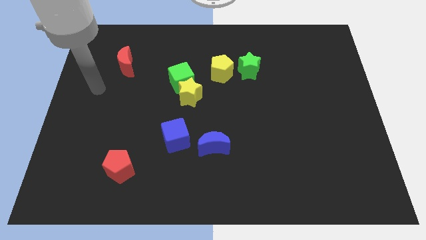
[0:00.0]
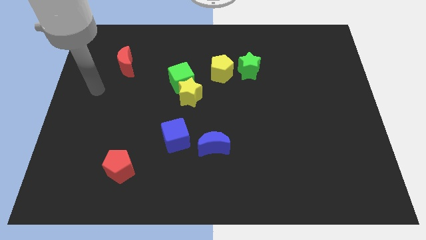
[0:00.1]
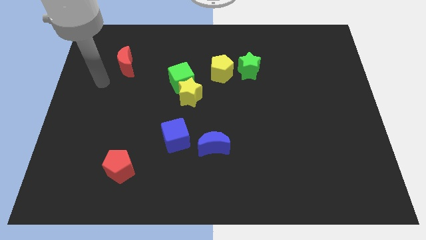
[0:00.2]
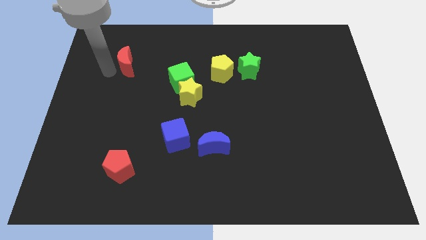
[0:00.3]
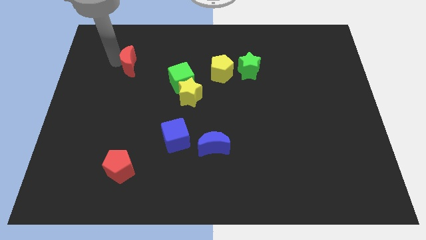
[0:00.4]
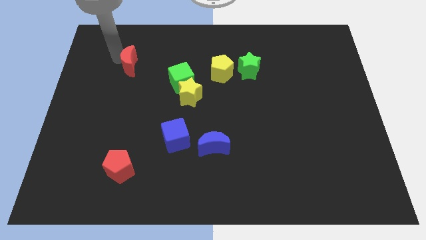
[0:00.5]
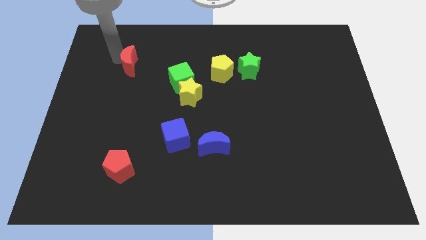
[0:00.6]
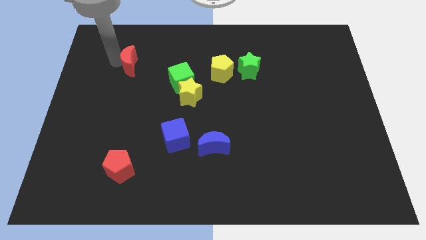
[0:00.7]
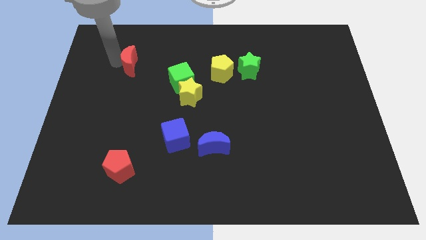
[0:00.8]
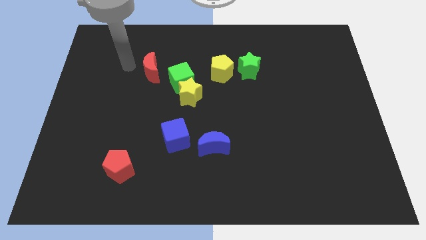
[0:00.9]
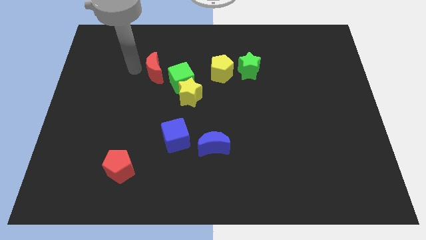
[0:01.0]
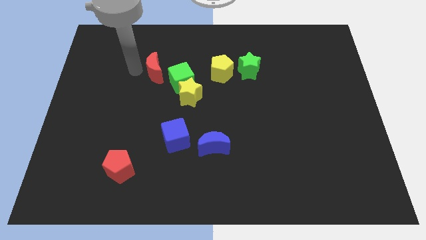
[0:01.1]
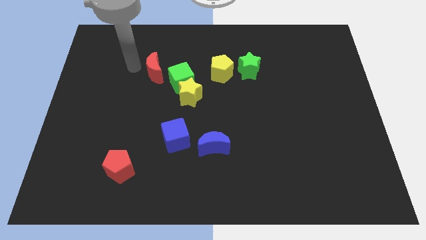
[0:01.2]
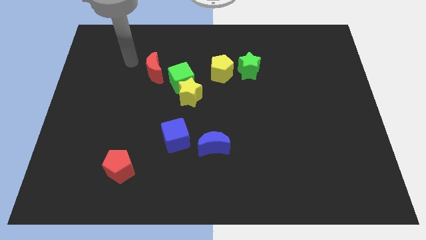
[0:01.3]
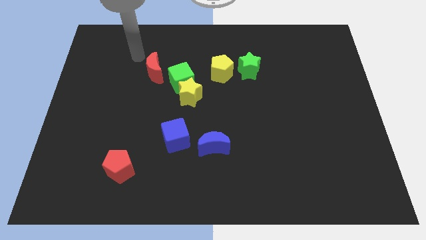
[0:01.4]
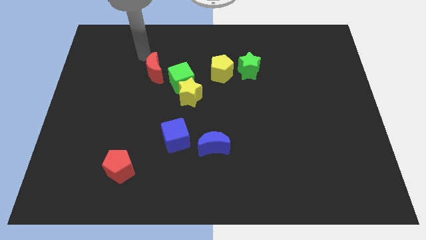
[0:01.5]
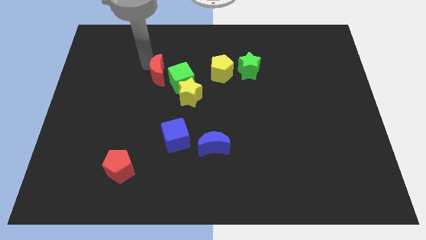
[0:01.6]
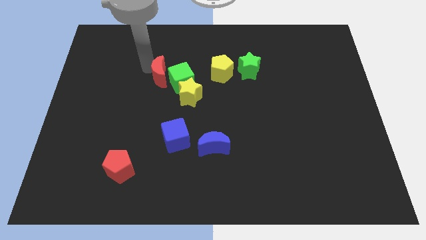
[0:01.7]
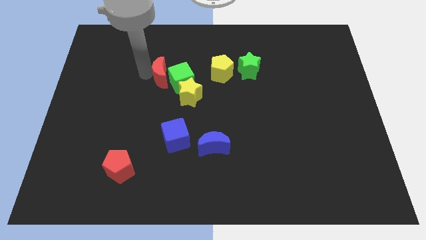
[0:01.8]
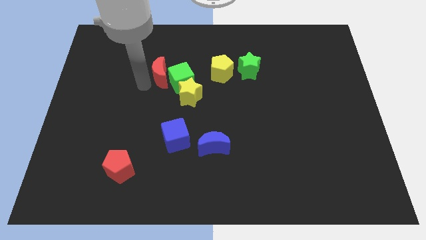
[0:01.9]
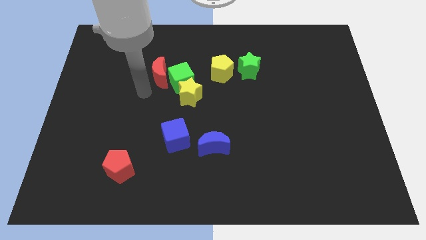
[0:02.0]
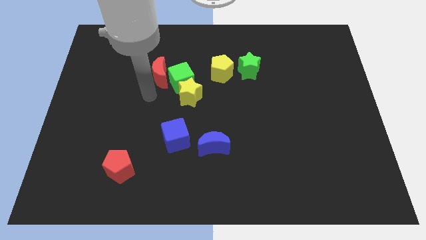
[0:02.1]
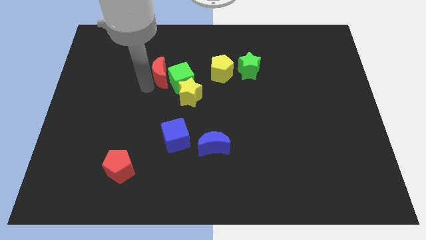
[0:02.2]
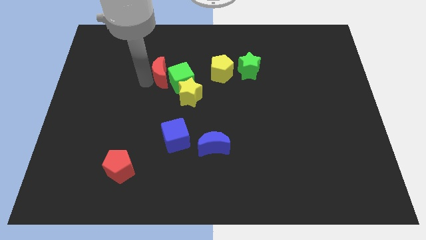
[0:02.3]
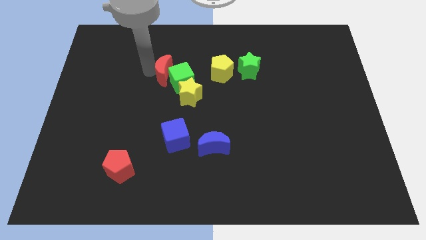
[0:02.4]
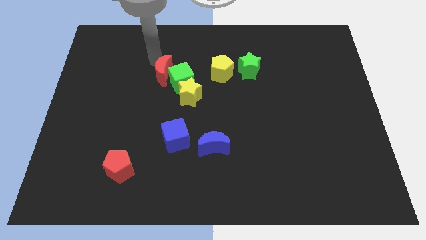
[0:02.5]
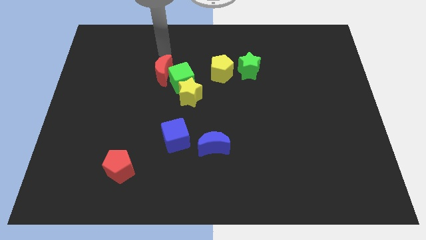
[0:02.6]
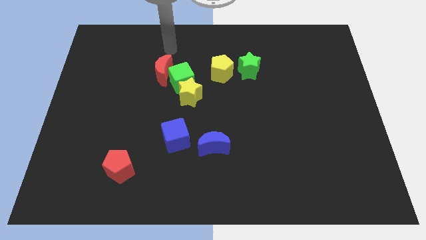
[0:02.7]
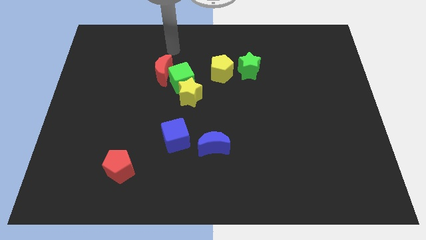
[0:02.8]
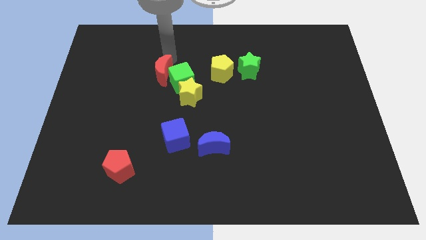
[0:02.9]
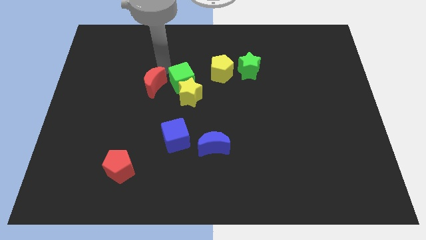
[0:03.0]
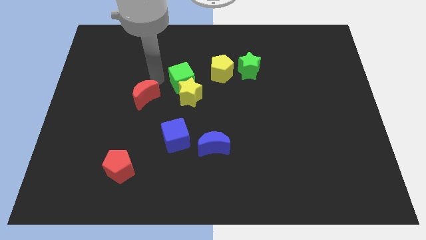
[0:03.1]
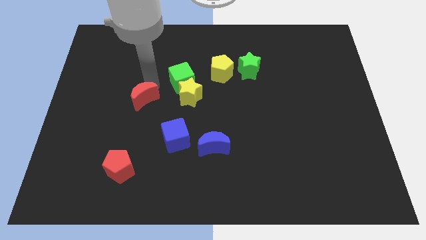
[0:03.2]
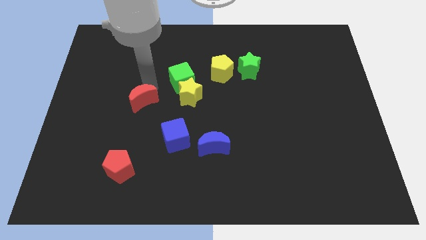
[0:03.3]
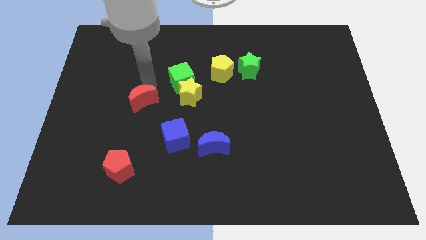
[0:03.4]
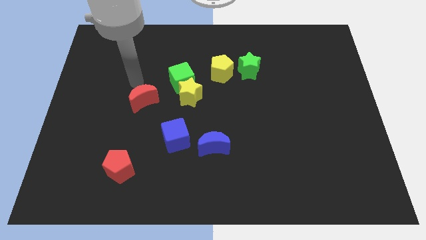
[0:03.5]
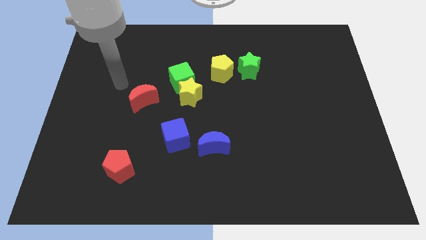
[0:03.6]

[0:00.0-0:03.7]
move red crescent horizontal to the yellow star

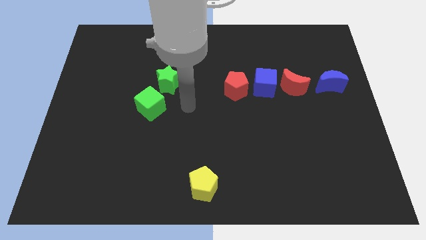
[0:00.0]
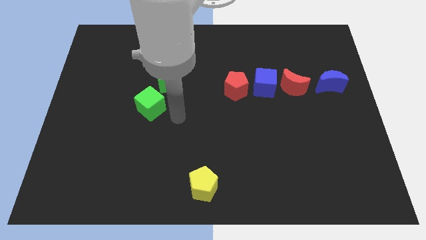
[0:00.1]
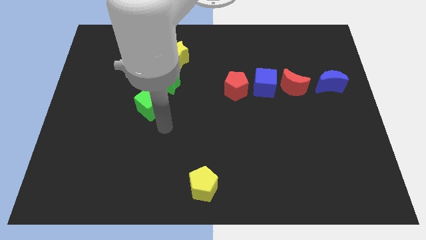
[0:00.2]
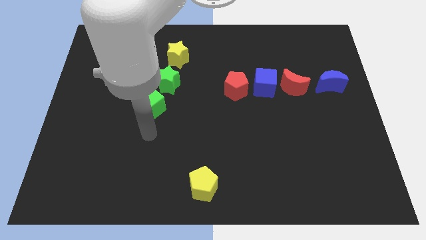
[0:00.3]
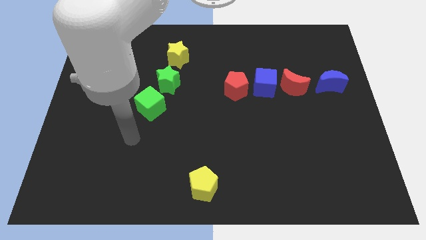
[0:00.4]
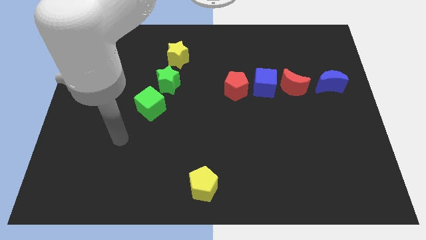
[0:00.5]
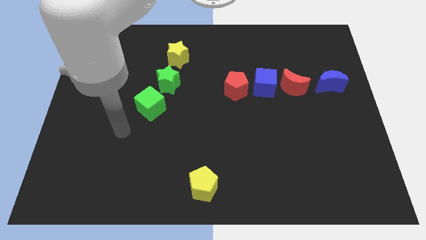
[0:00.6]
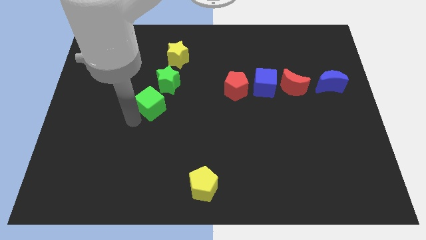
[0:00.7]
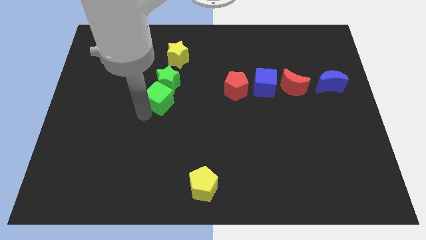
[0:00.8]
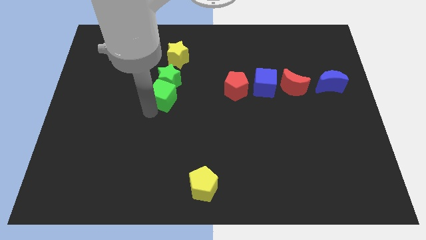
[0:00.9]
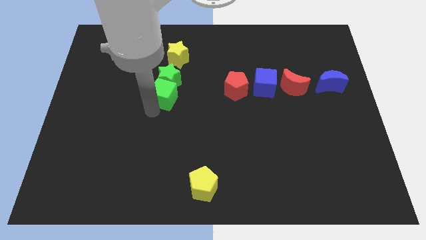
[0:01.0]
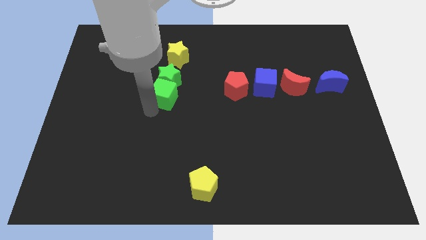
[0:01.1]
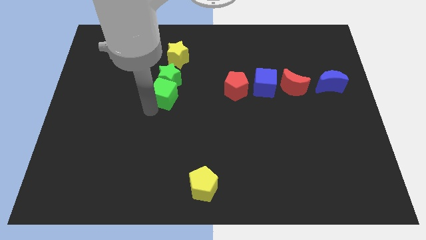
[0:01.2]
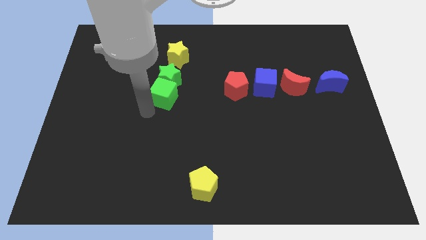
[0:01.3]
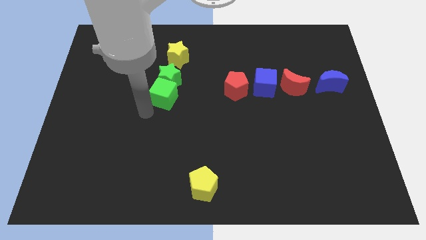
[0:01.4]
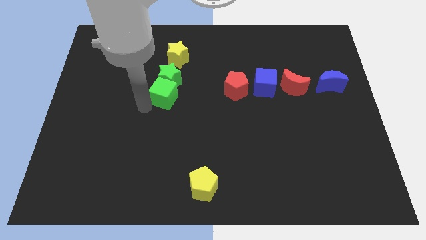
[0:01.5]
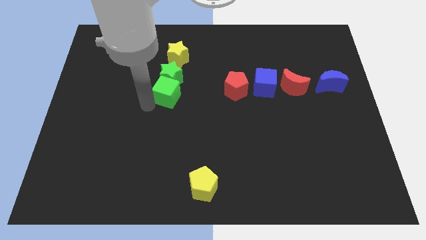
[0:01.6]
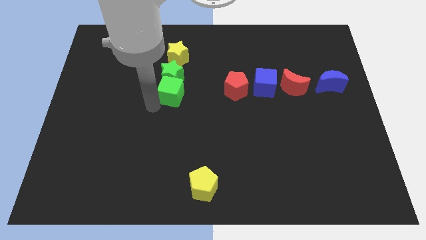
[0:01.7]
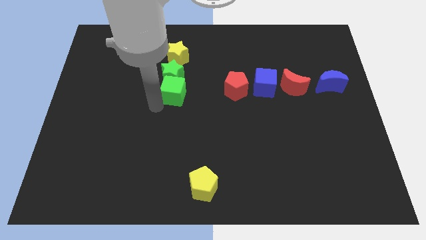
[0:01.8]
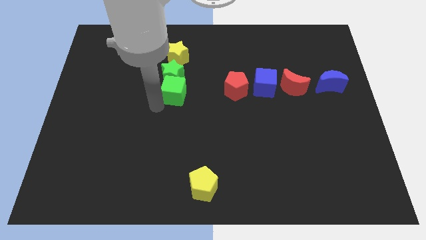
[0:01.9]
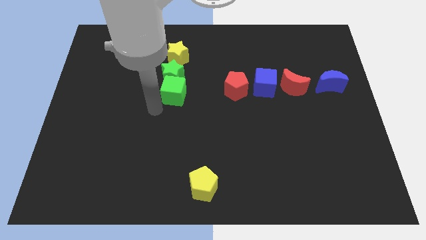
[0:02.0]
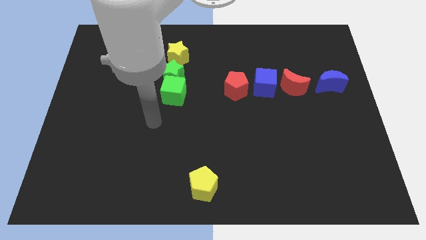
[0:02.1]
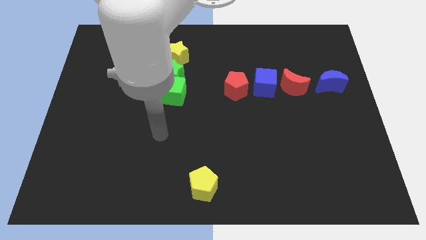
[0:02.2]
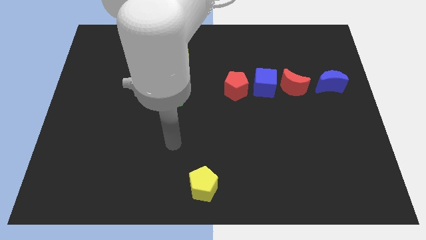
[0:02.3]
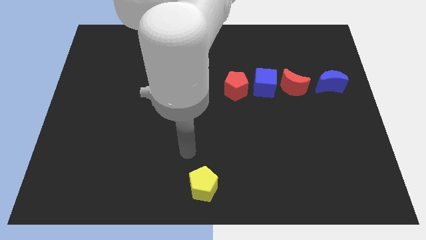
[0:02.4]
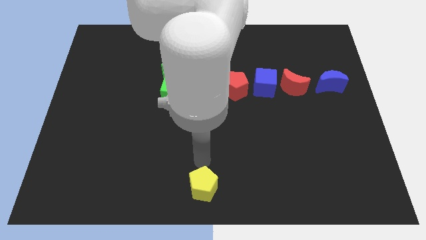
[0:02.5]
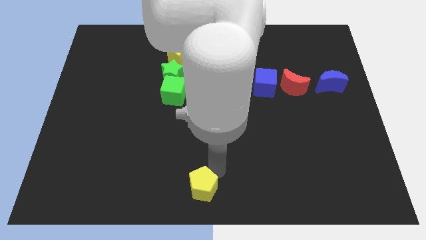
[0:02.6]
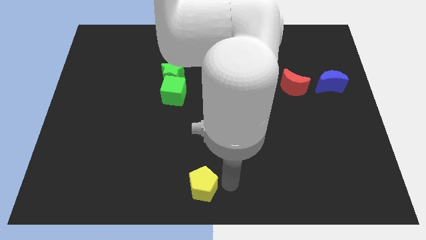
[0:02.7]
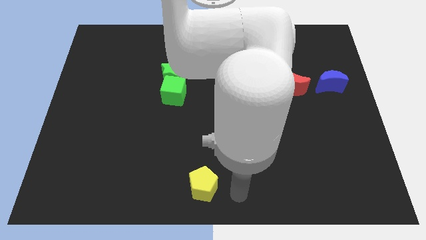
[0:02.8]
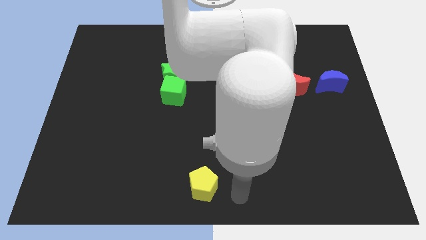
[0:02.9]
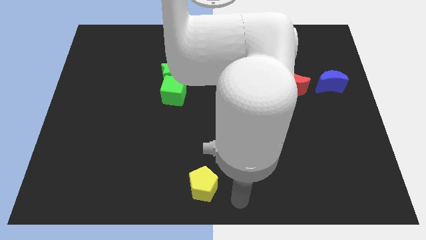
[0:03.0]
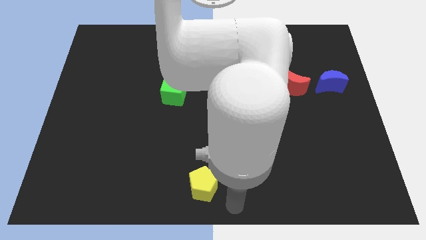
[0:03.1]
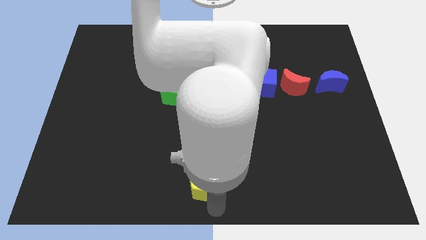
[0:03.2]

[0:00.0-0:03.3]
push the green cube into the green star

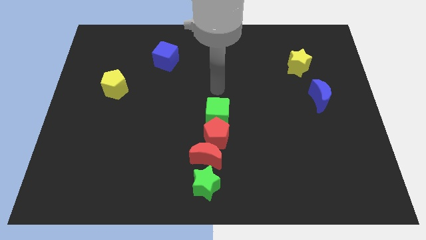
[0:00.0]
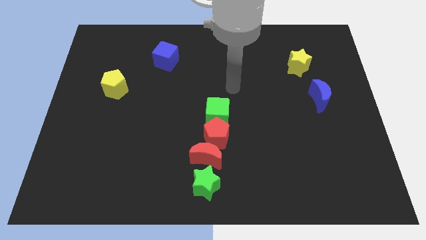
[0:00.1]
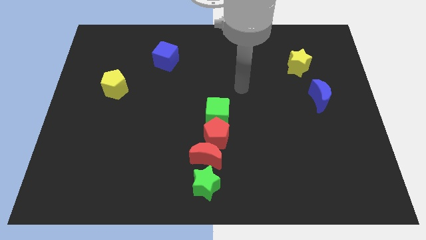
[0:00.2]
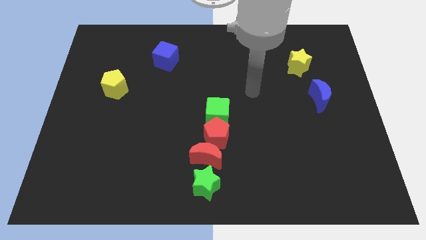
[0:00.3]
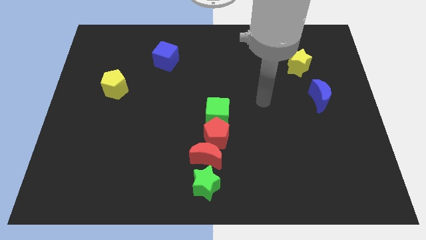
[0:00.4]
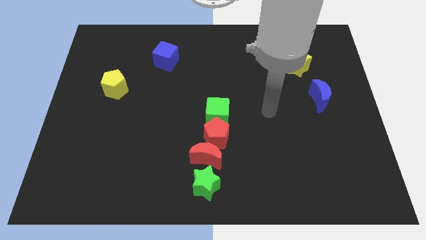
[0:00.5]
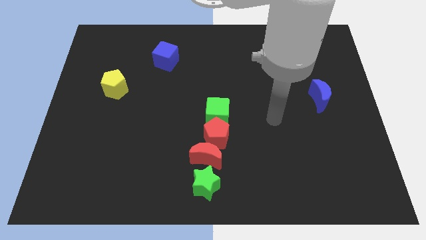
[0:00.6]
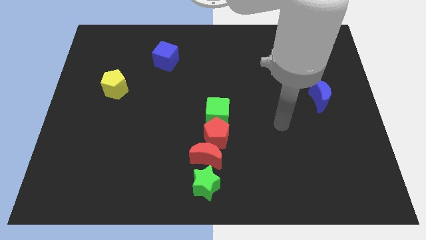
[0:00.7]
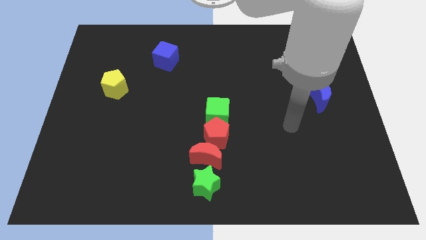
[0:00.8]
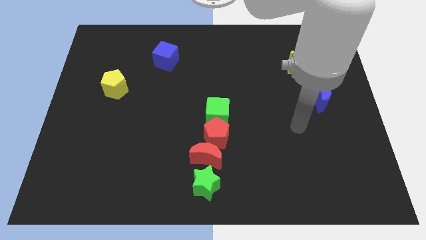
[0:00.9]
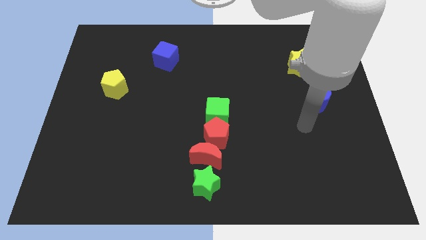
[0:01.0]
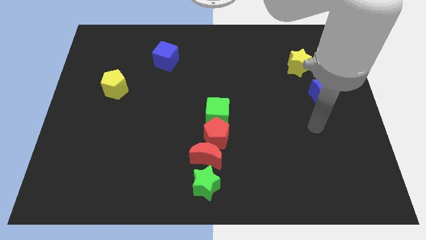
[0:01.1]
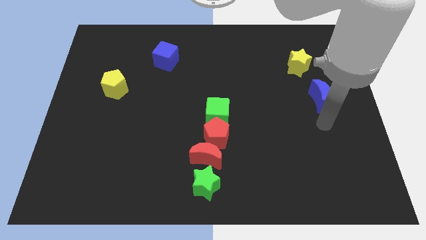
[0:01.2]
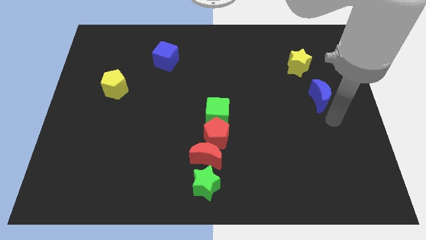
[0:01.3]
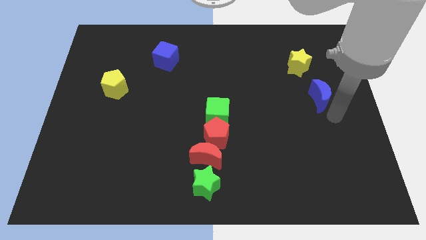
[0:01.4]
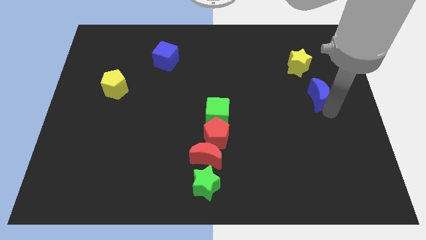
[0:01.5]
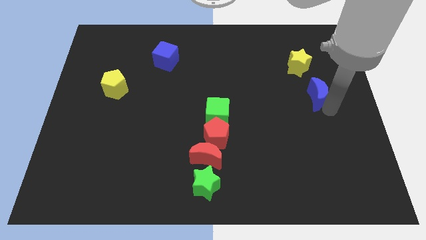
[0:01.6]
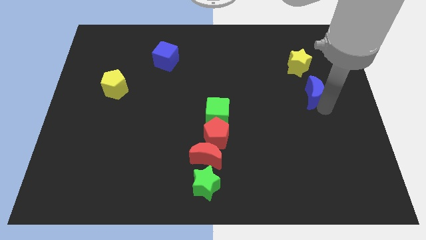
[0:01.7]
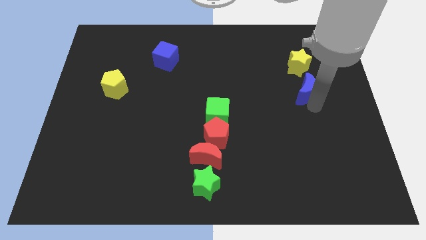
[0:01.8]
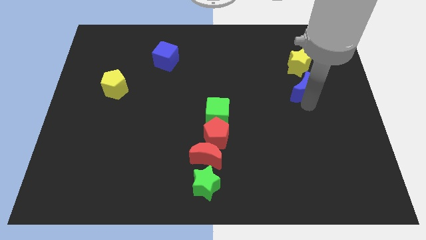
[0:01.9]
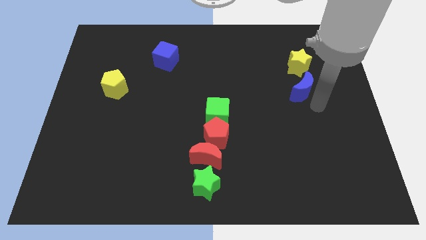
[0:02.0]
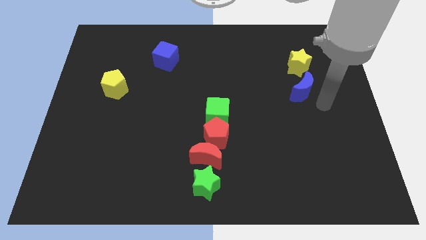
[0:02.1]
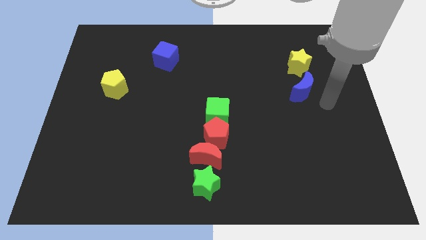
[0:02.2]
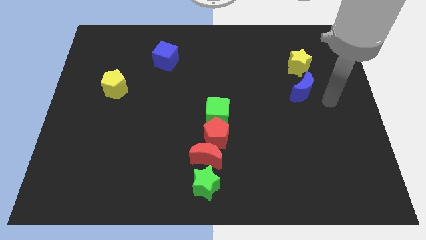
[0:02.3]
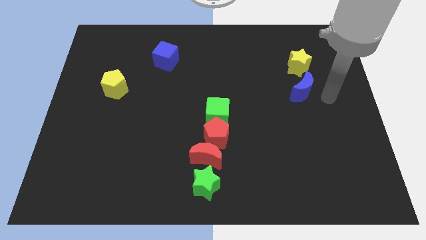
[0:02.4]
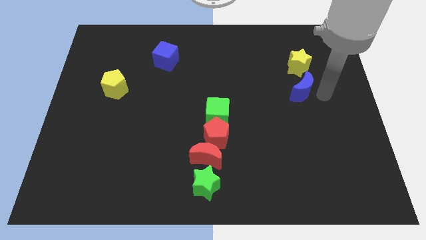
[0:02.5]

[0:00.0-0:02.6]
place the blue crescent below the yellow star
